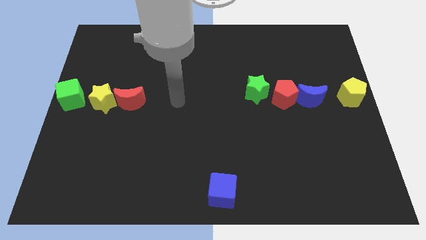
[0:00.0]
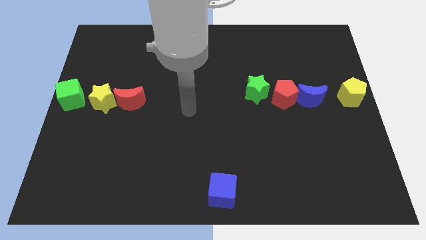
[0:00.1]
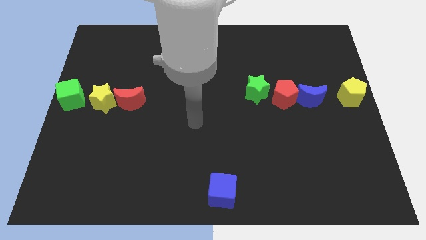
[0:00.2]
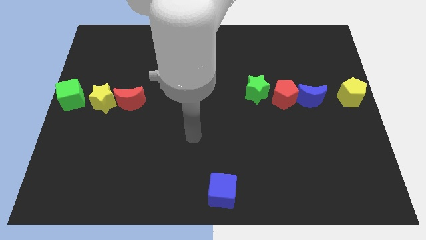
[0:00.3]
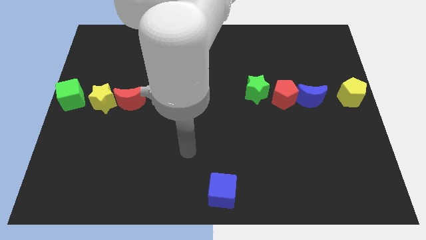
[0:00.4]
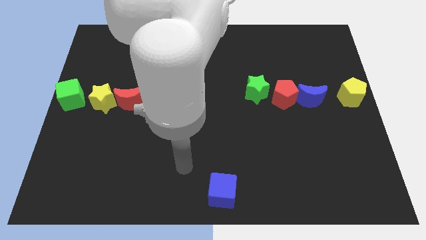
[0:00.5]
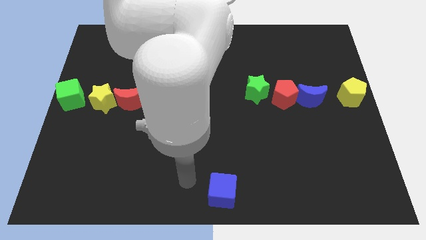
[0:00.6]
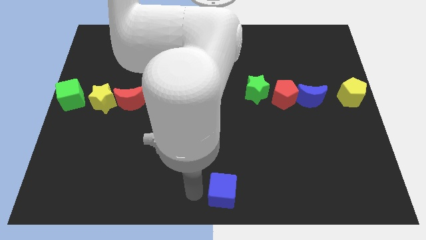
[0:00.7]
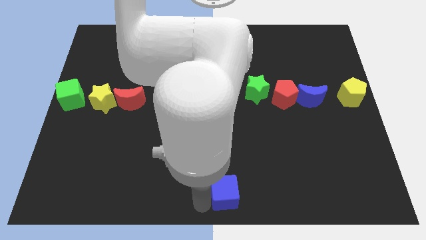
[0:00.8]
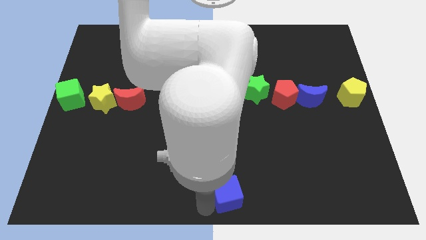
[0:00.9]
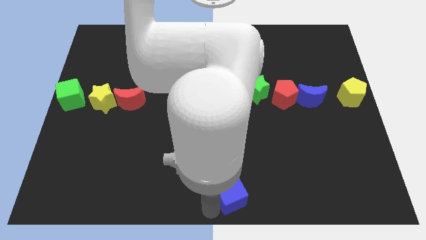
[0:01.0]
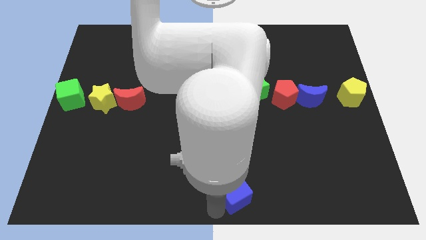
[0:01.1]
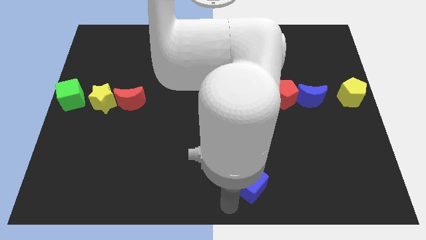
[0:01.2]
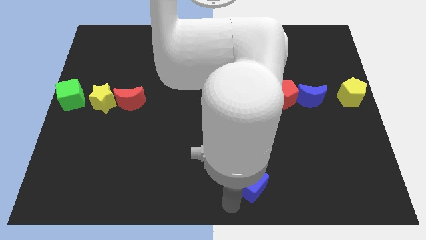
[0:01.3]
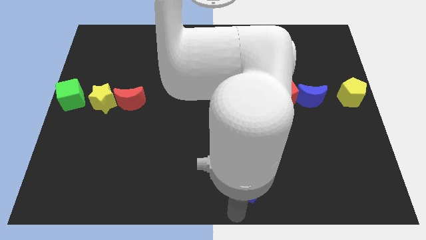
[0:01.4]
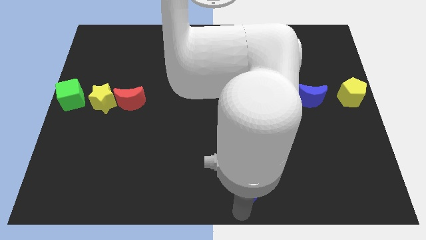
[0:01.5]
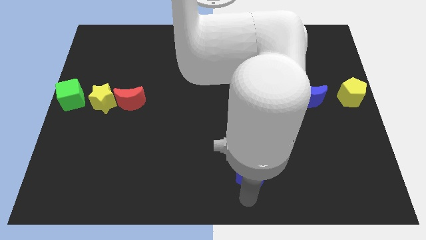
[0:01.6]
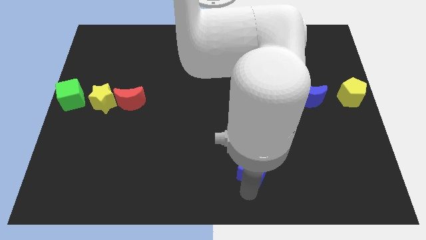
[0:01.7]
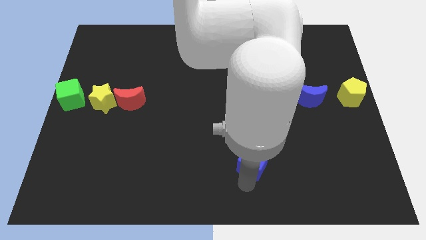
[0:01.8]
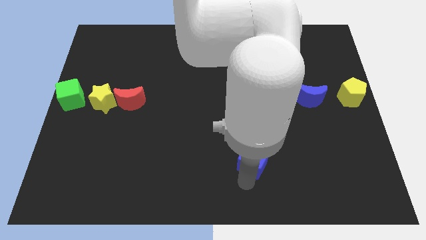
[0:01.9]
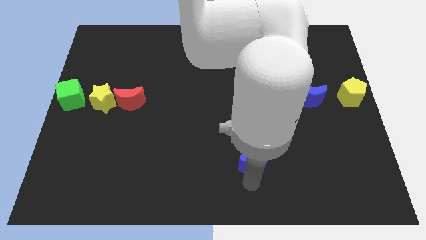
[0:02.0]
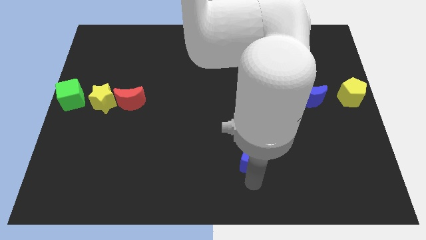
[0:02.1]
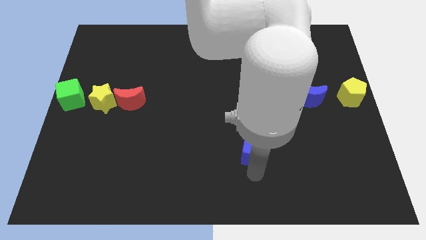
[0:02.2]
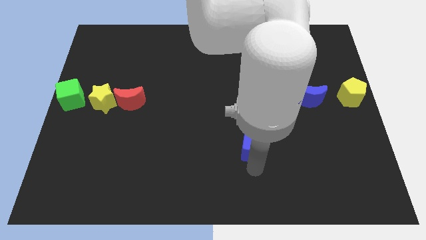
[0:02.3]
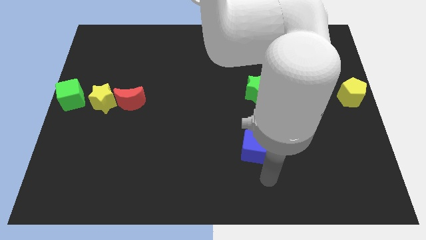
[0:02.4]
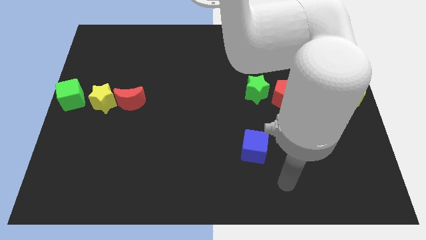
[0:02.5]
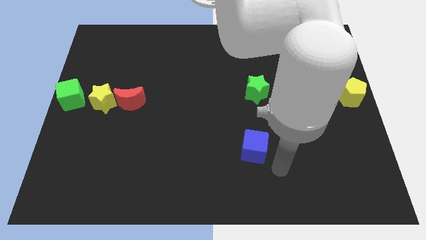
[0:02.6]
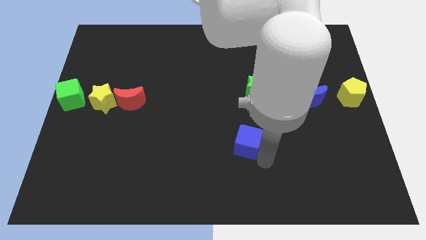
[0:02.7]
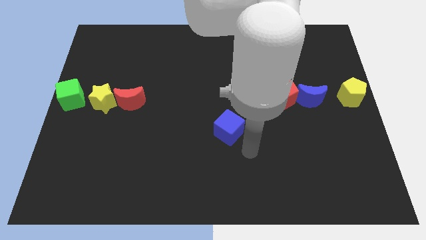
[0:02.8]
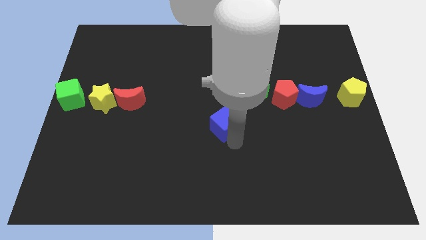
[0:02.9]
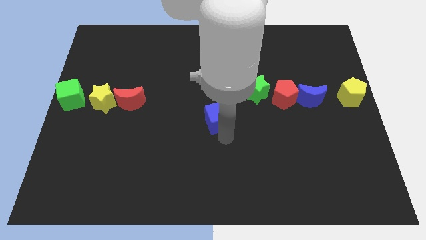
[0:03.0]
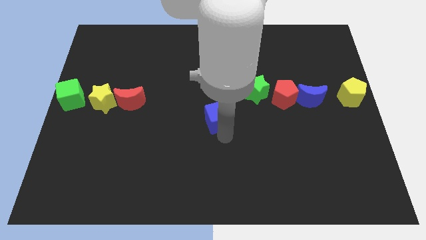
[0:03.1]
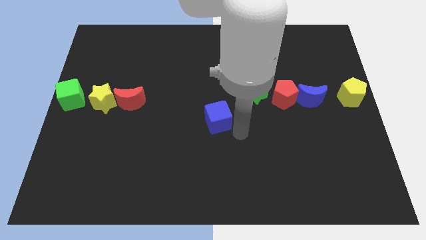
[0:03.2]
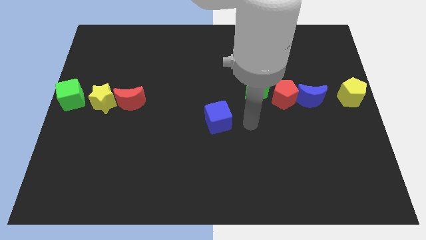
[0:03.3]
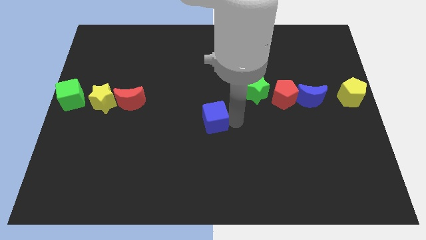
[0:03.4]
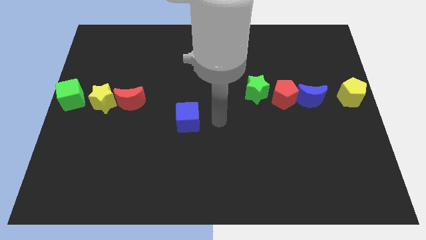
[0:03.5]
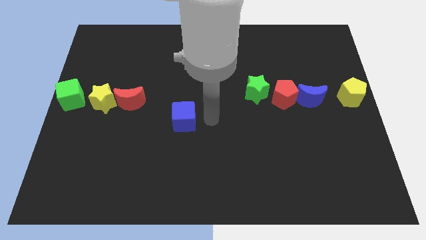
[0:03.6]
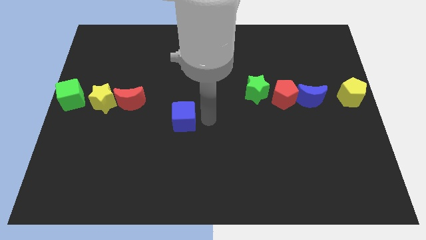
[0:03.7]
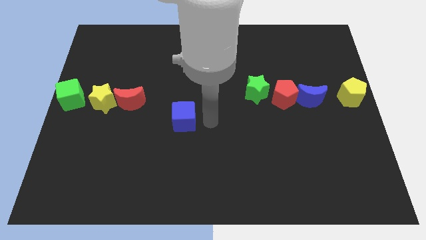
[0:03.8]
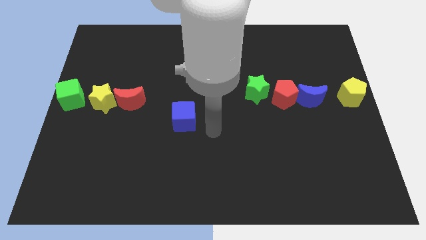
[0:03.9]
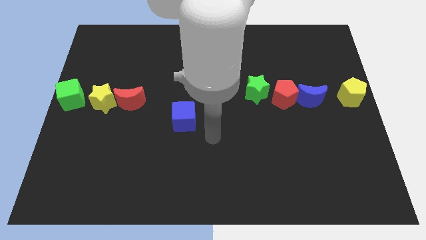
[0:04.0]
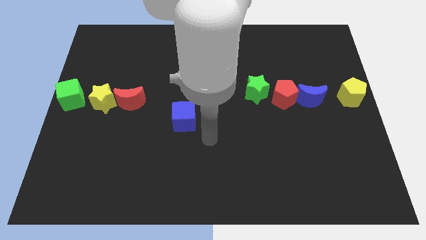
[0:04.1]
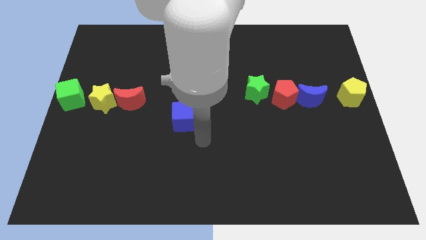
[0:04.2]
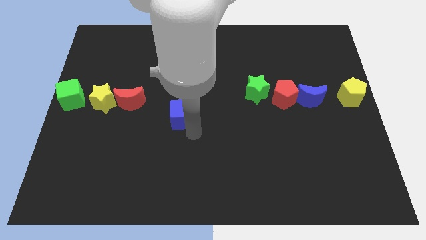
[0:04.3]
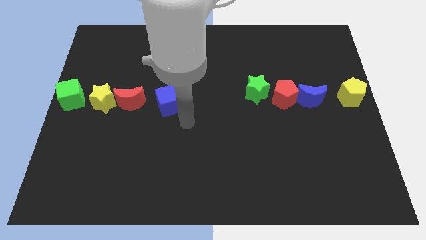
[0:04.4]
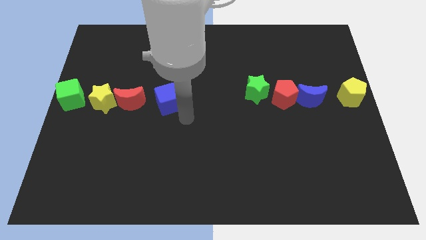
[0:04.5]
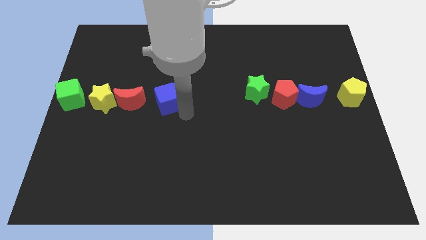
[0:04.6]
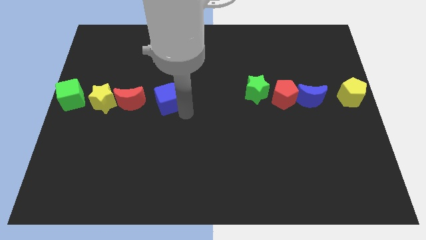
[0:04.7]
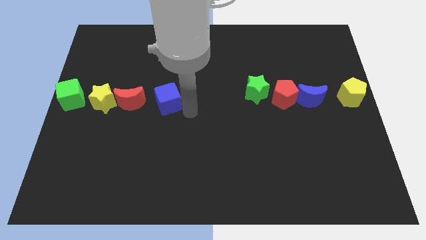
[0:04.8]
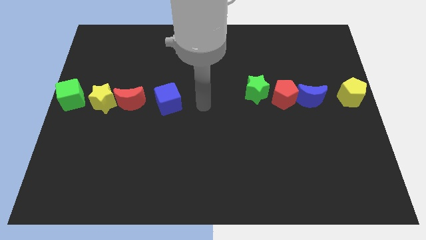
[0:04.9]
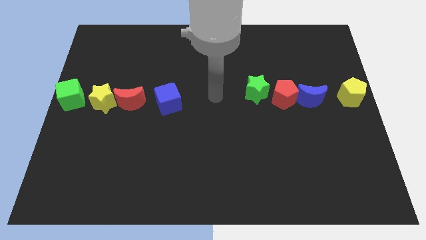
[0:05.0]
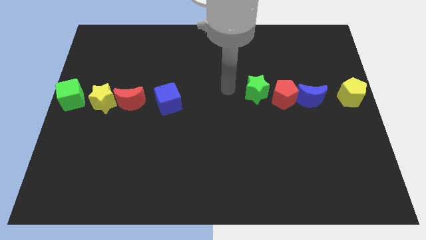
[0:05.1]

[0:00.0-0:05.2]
move the blue cube to the right side of the red crescent

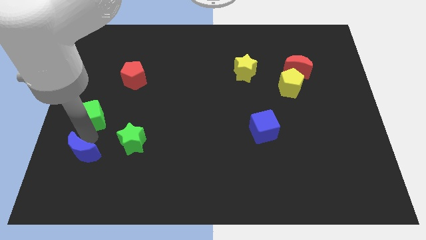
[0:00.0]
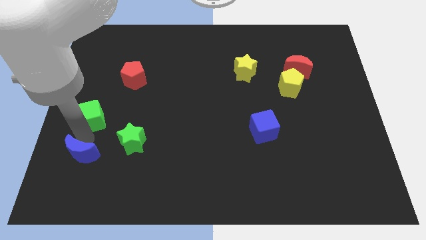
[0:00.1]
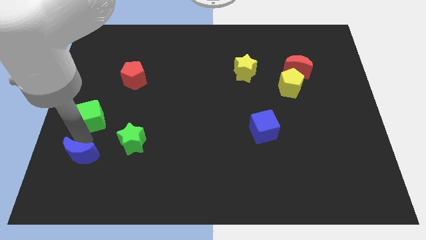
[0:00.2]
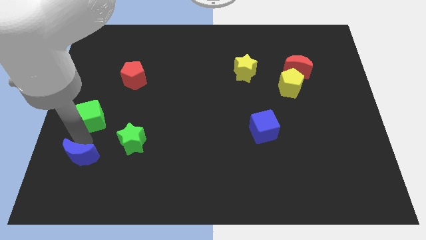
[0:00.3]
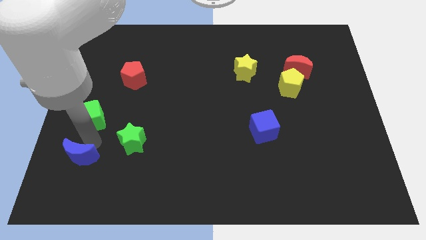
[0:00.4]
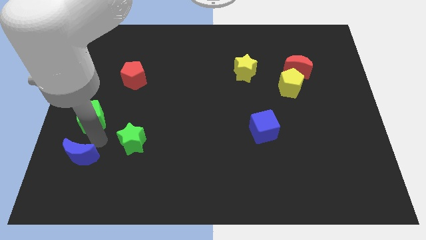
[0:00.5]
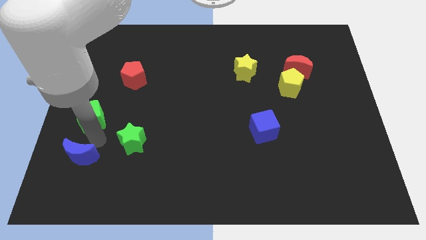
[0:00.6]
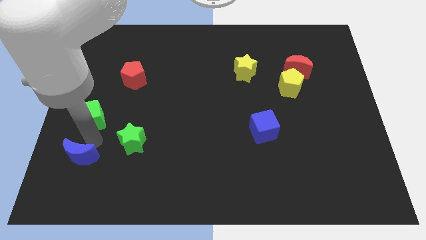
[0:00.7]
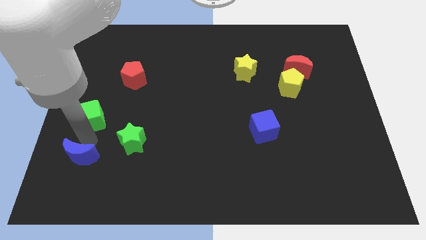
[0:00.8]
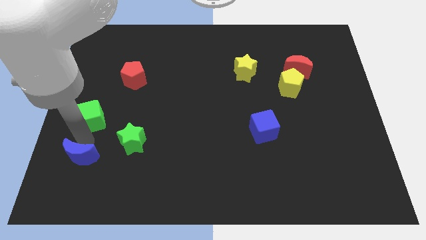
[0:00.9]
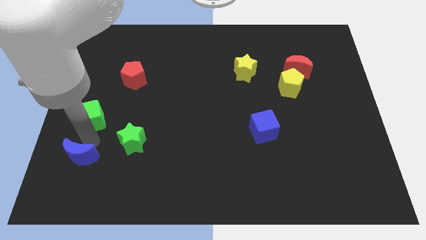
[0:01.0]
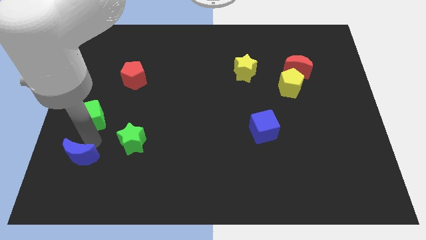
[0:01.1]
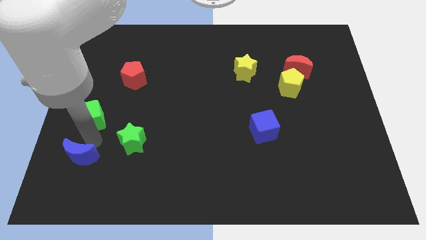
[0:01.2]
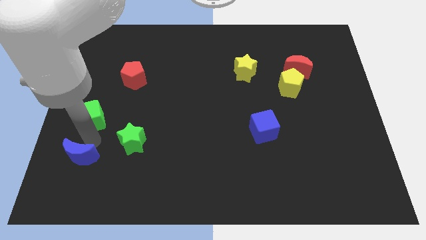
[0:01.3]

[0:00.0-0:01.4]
move your arm in between the green cube and the blue moon

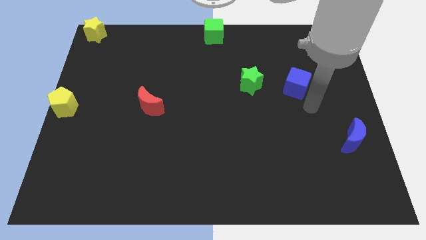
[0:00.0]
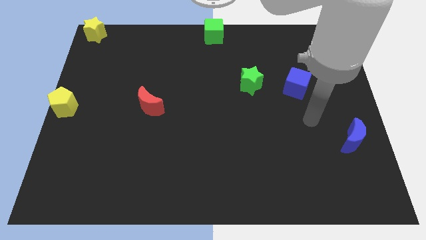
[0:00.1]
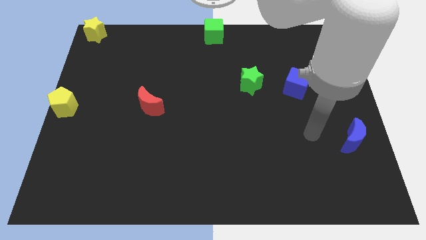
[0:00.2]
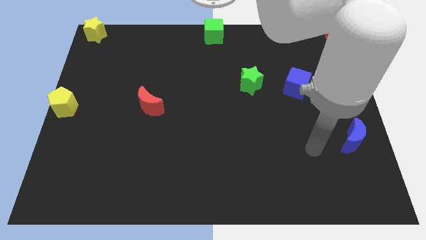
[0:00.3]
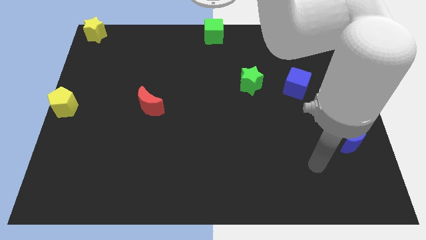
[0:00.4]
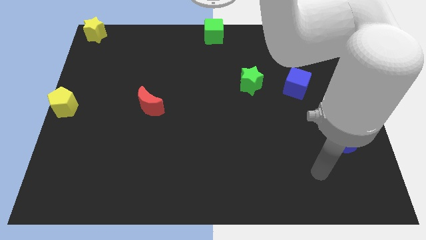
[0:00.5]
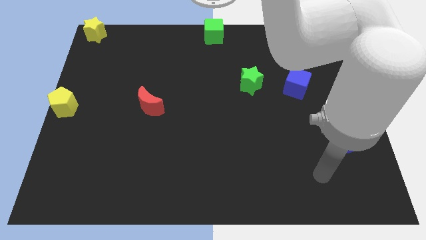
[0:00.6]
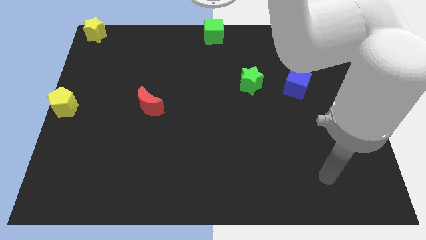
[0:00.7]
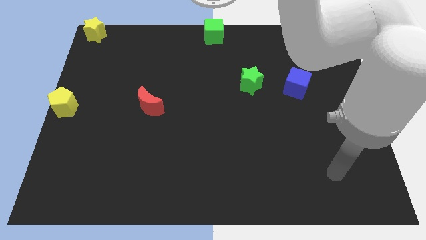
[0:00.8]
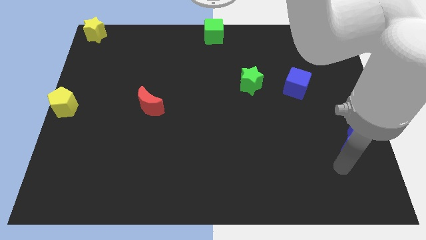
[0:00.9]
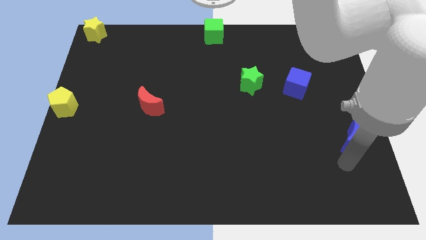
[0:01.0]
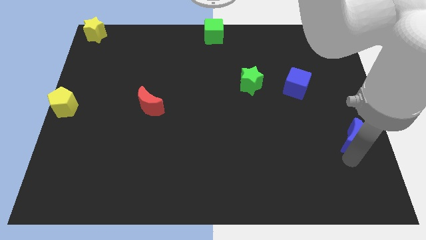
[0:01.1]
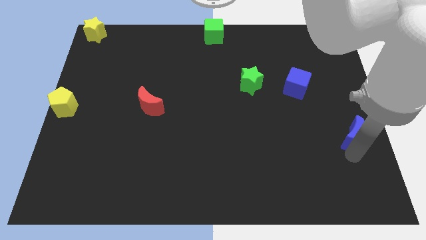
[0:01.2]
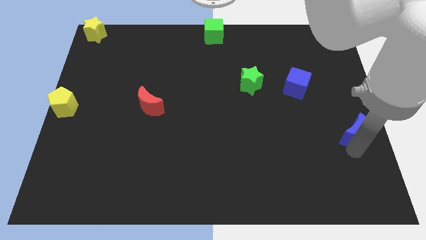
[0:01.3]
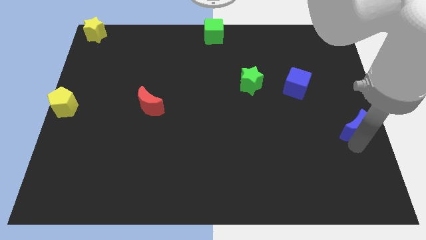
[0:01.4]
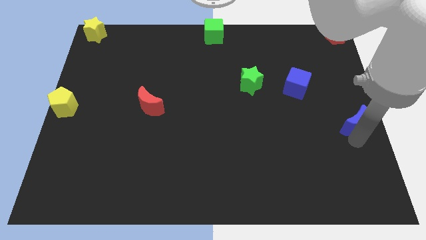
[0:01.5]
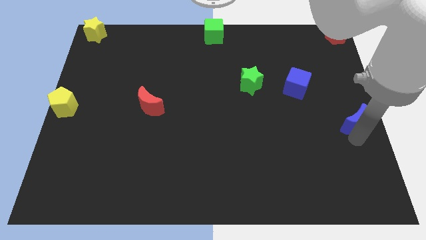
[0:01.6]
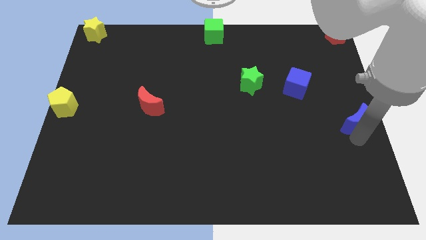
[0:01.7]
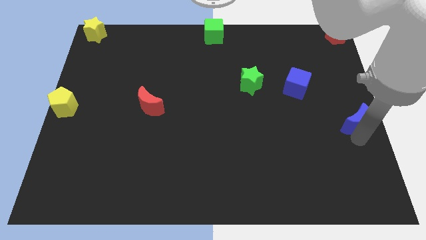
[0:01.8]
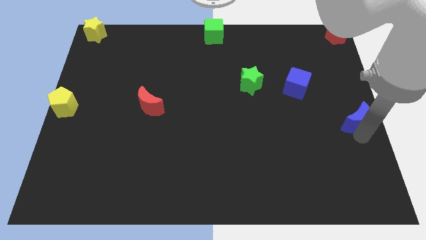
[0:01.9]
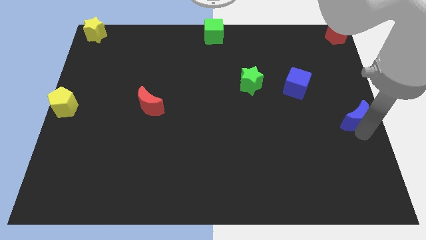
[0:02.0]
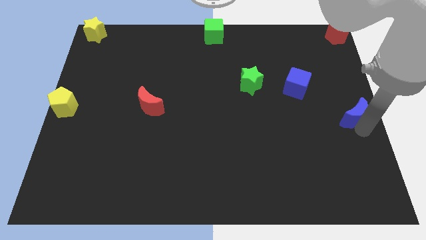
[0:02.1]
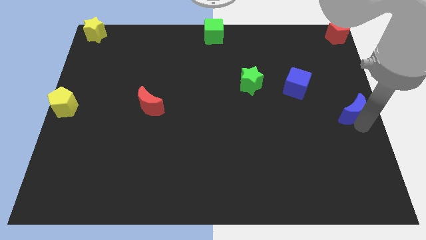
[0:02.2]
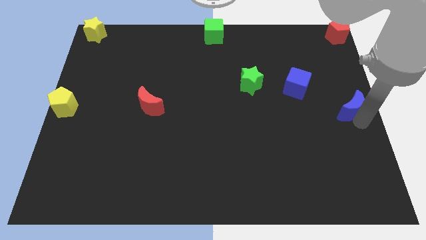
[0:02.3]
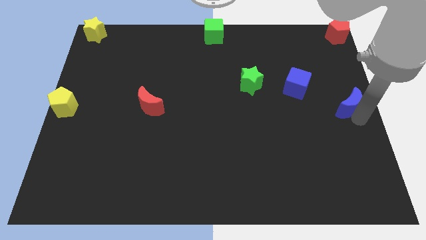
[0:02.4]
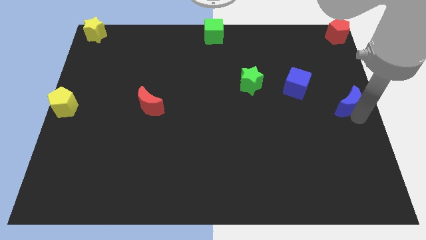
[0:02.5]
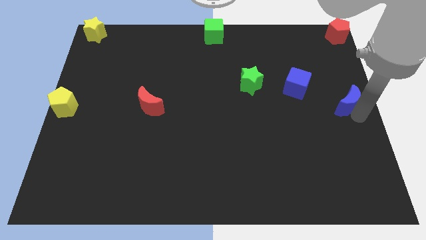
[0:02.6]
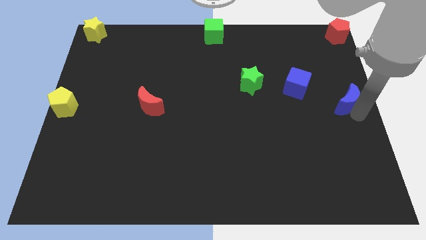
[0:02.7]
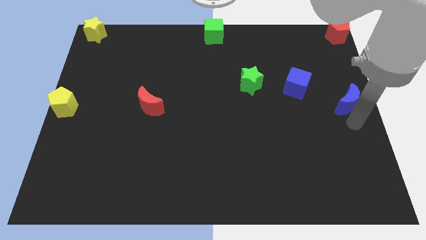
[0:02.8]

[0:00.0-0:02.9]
push the blue moon to the right center
